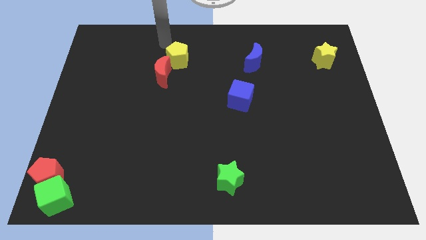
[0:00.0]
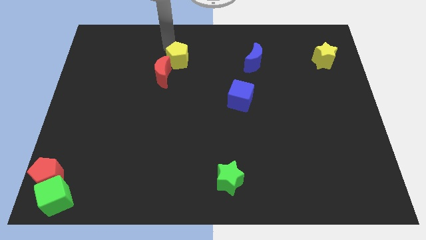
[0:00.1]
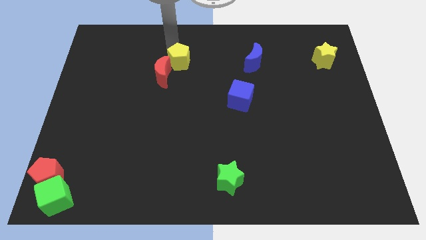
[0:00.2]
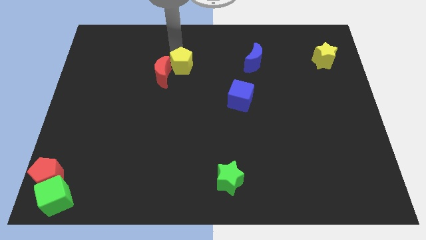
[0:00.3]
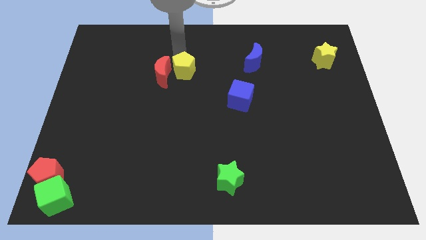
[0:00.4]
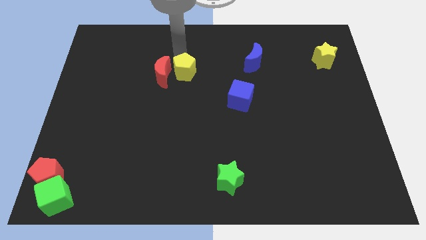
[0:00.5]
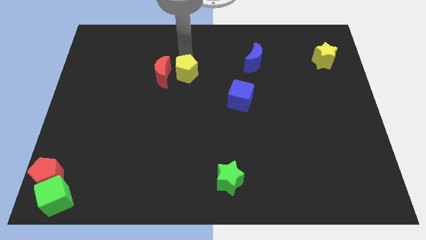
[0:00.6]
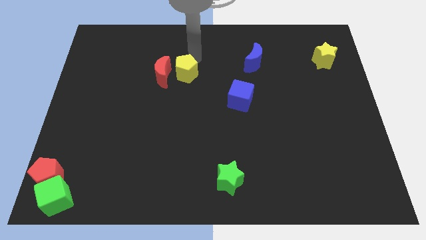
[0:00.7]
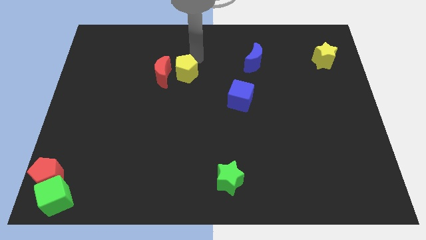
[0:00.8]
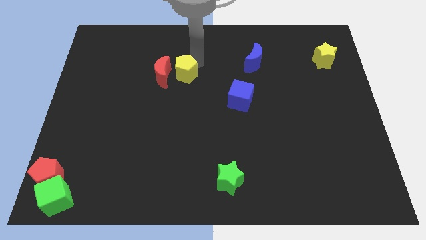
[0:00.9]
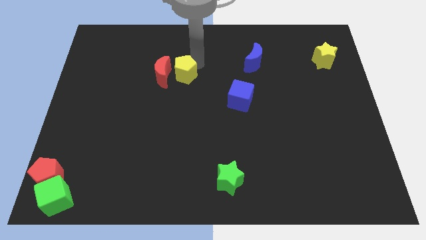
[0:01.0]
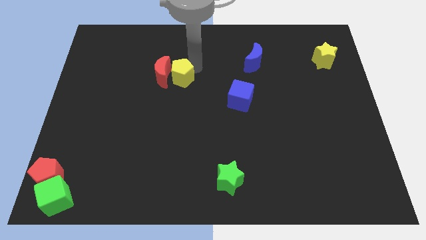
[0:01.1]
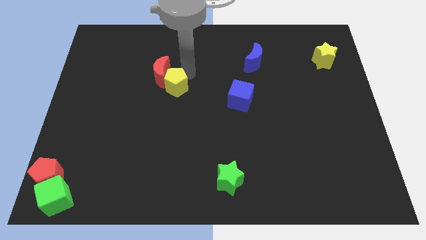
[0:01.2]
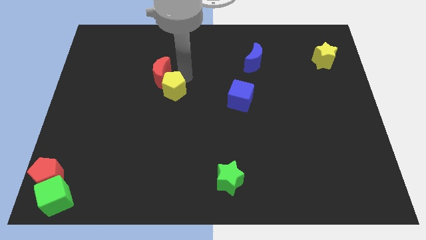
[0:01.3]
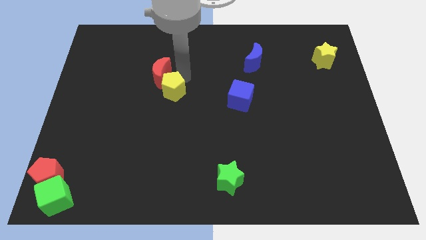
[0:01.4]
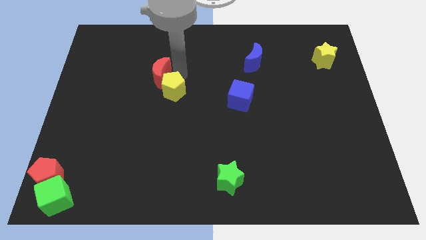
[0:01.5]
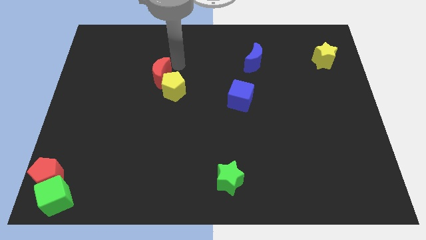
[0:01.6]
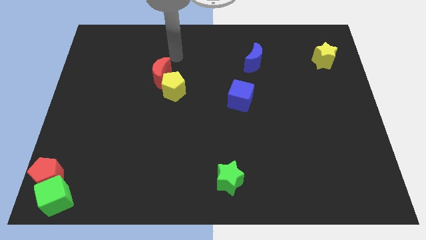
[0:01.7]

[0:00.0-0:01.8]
slightly push the yellow pentagon towards the center of the board

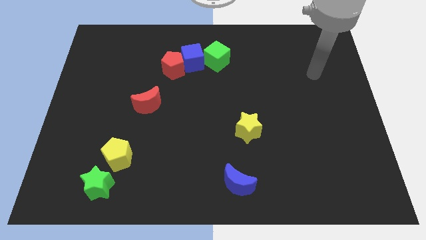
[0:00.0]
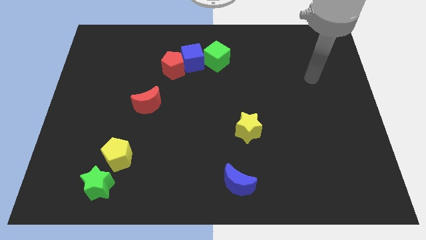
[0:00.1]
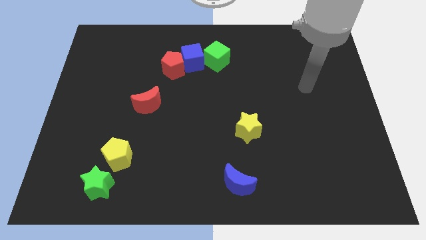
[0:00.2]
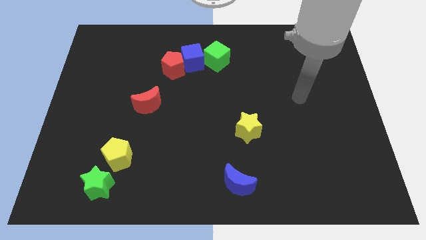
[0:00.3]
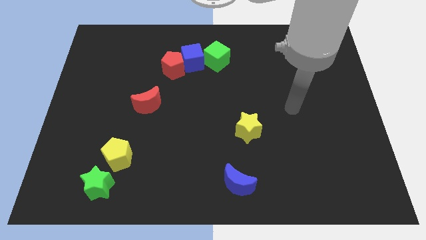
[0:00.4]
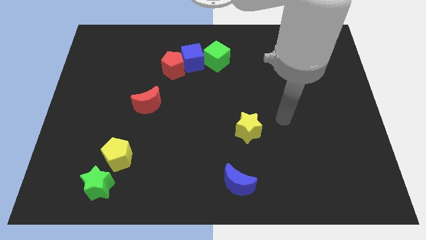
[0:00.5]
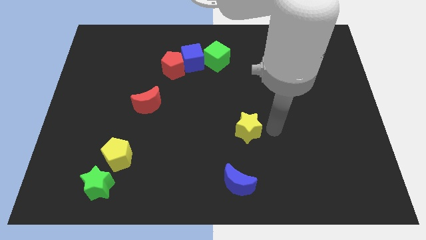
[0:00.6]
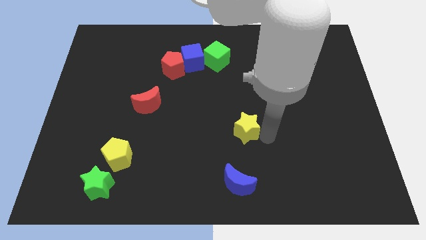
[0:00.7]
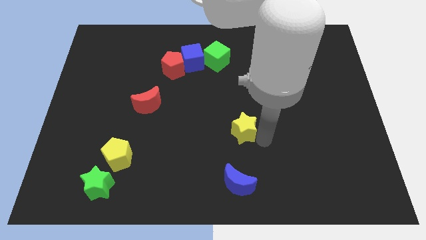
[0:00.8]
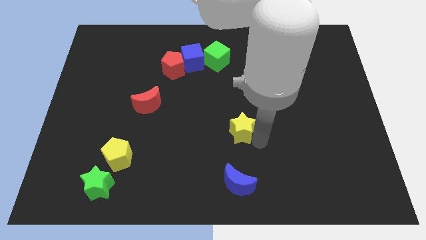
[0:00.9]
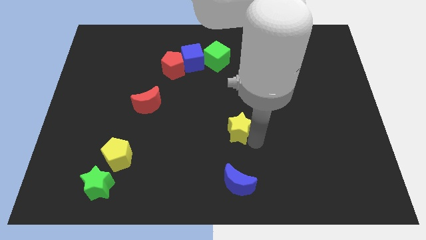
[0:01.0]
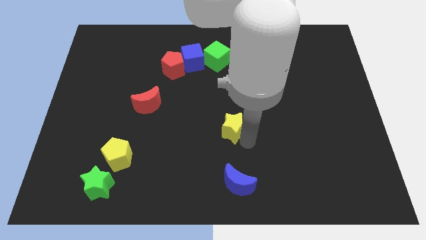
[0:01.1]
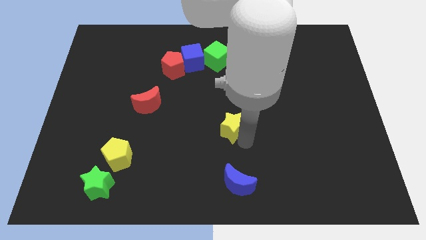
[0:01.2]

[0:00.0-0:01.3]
slightly push the yellow star towards the left side

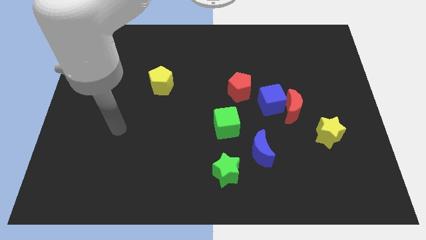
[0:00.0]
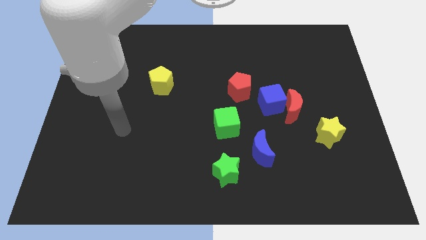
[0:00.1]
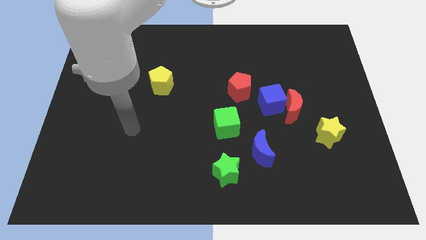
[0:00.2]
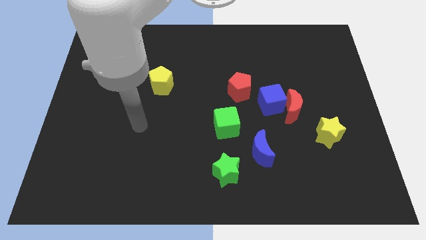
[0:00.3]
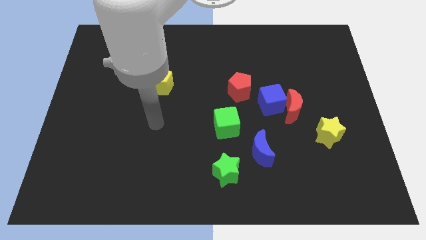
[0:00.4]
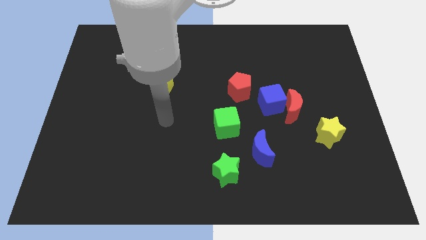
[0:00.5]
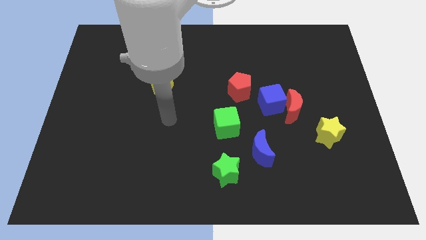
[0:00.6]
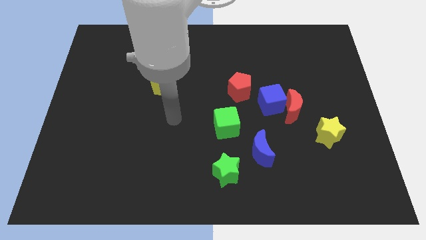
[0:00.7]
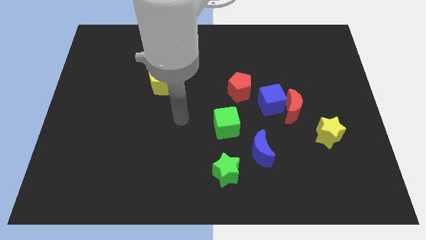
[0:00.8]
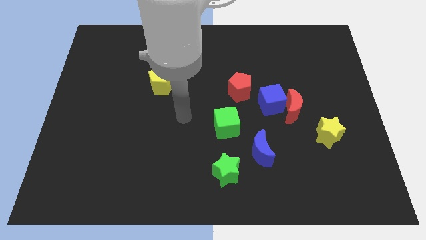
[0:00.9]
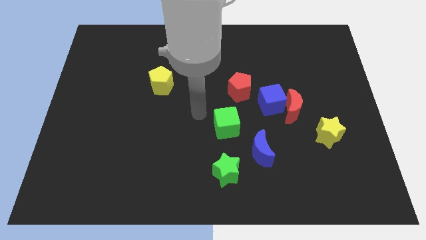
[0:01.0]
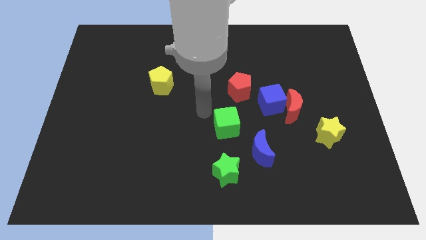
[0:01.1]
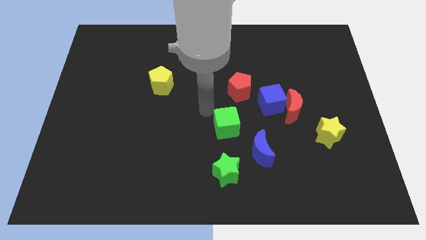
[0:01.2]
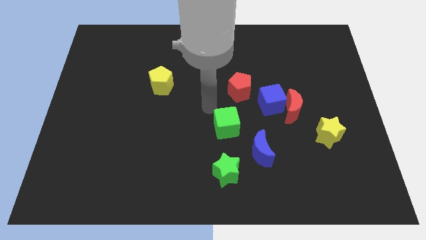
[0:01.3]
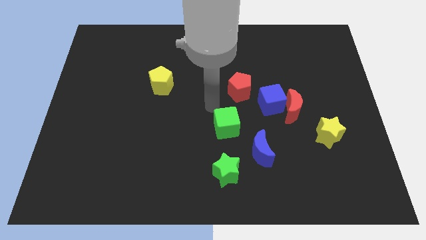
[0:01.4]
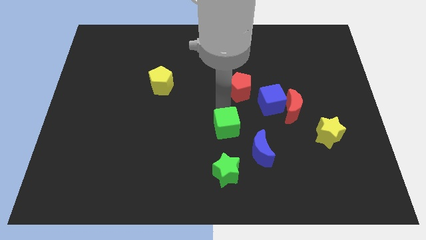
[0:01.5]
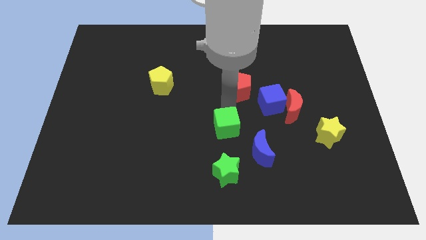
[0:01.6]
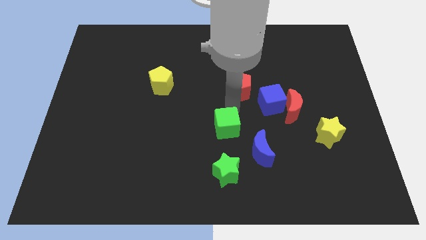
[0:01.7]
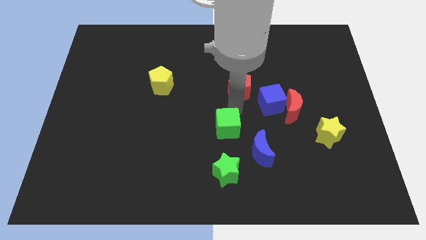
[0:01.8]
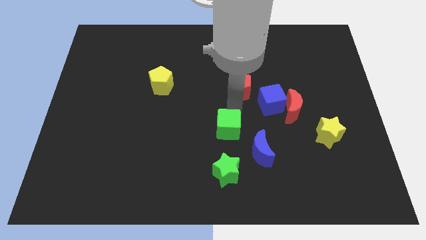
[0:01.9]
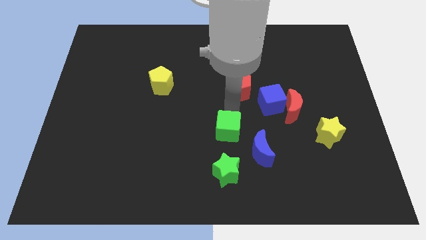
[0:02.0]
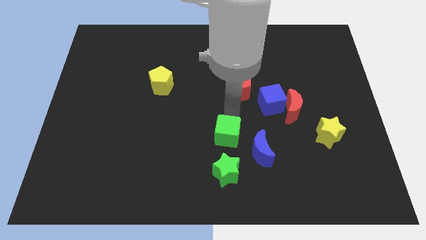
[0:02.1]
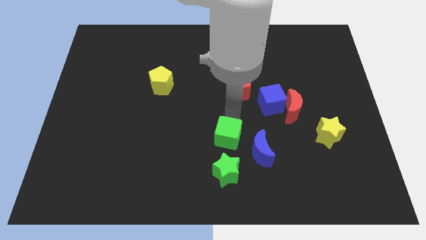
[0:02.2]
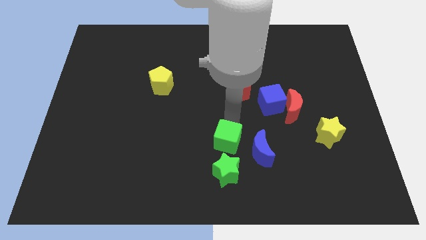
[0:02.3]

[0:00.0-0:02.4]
move the green cube close to the green star

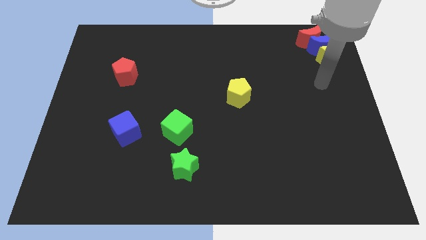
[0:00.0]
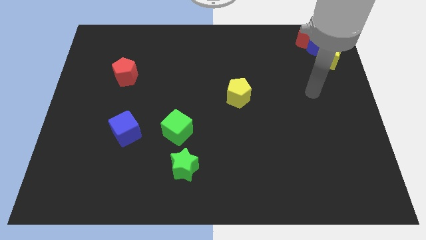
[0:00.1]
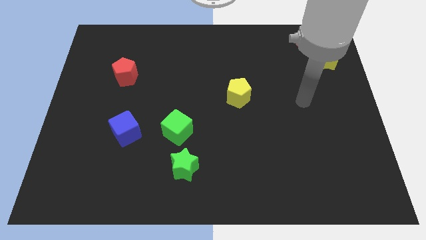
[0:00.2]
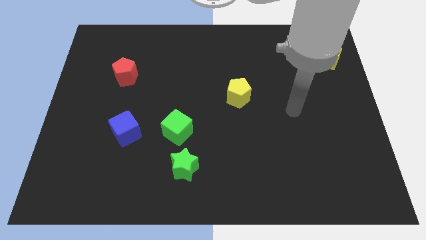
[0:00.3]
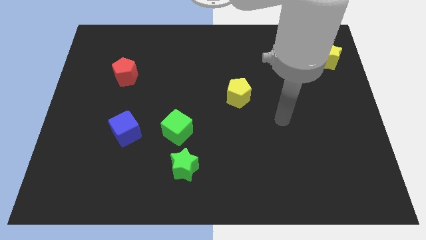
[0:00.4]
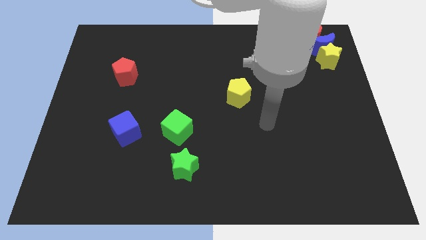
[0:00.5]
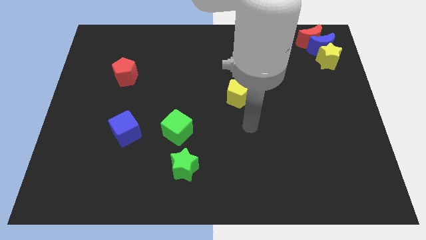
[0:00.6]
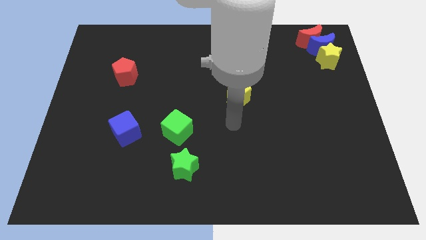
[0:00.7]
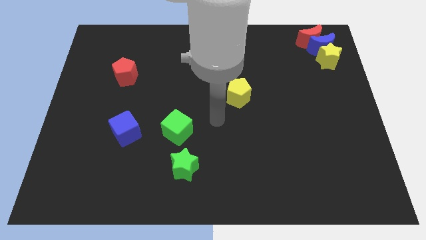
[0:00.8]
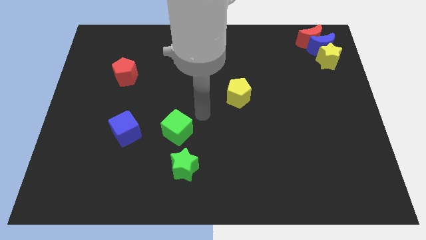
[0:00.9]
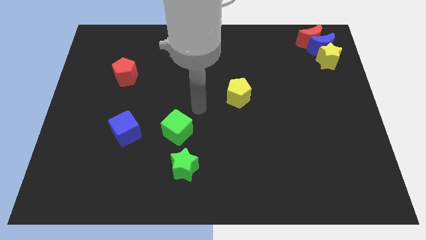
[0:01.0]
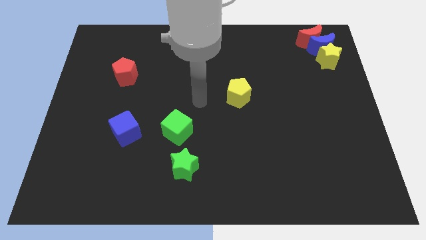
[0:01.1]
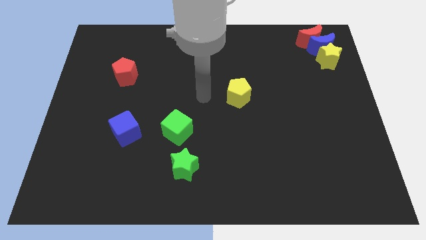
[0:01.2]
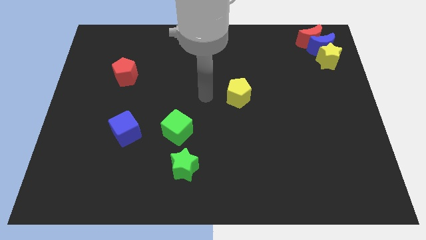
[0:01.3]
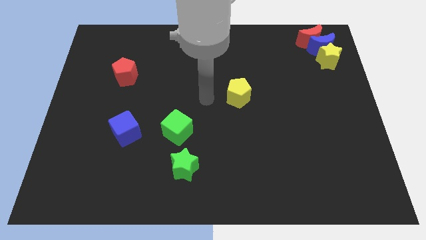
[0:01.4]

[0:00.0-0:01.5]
point your arm at the left of the yellow pentagon

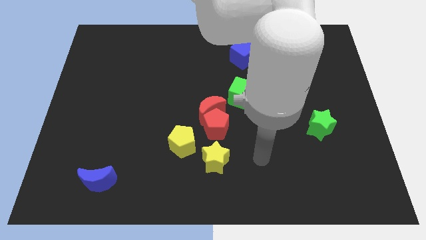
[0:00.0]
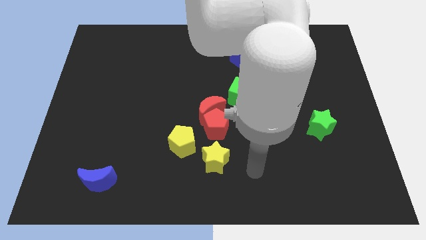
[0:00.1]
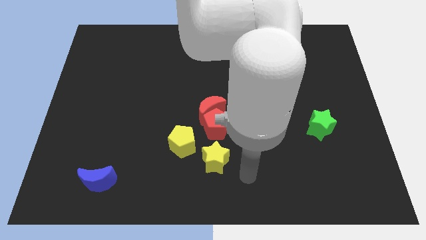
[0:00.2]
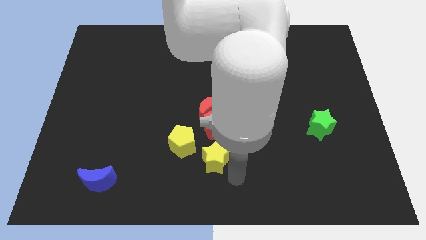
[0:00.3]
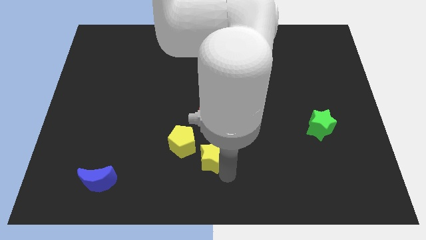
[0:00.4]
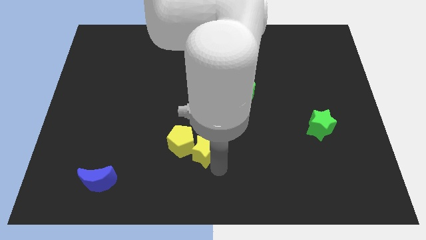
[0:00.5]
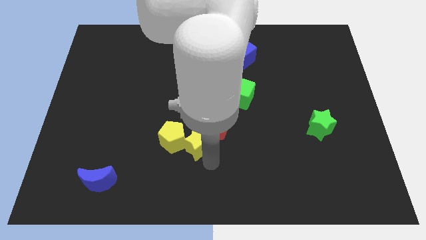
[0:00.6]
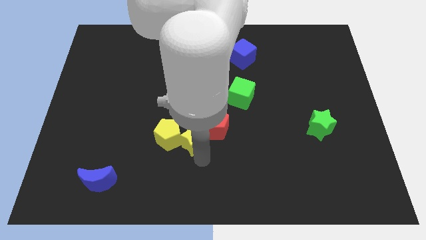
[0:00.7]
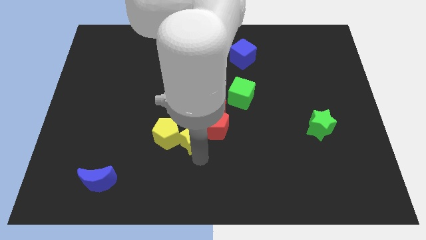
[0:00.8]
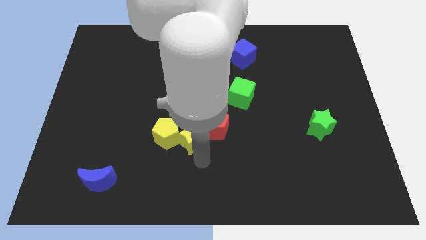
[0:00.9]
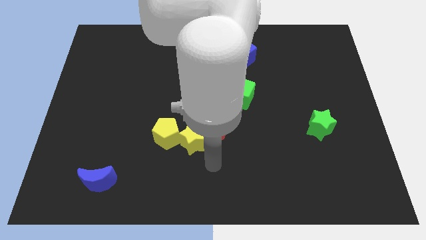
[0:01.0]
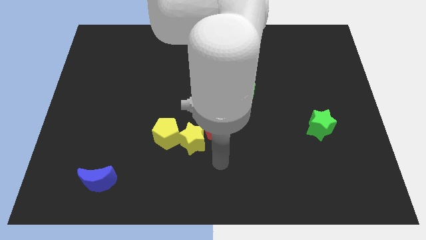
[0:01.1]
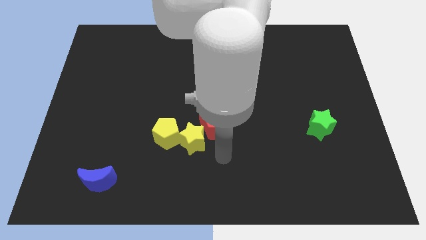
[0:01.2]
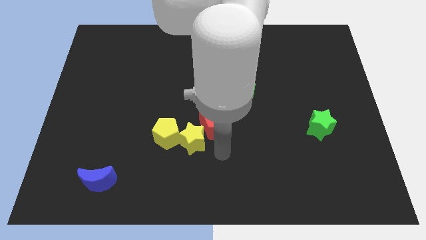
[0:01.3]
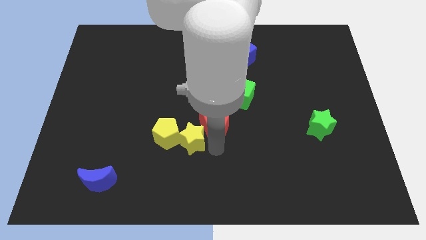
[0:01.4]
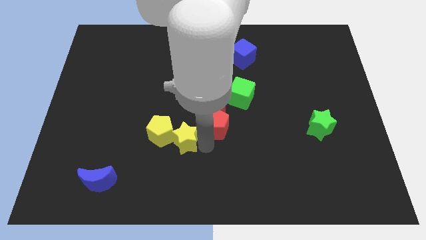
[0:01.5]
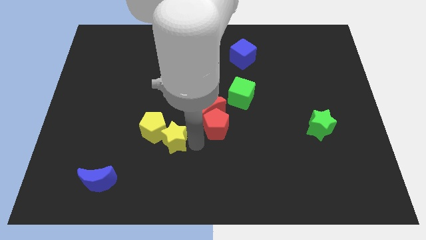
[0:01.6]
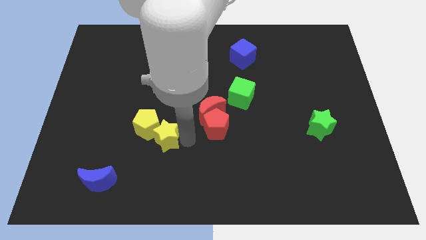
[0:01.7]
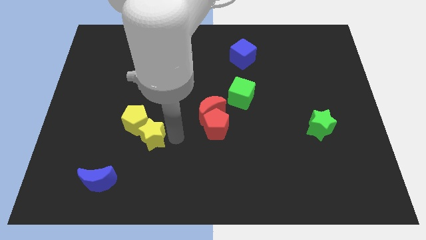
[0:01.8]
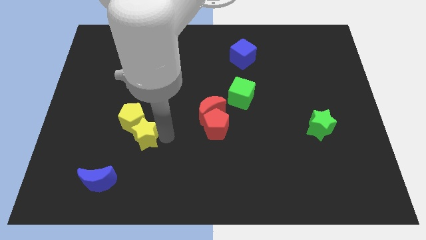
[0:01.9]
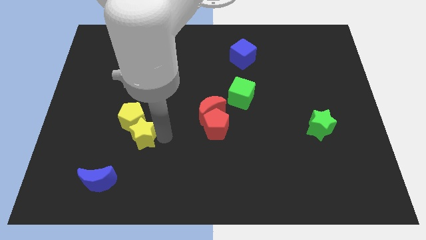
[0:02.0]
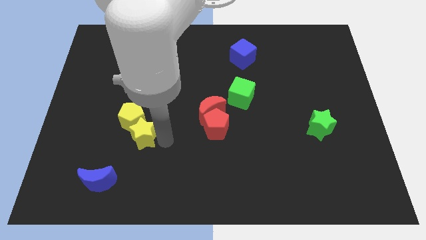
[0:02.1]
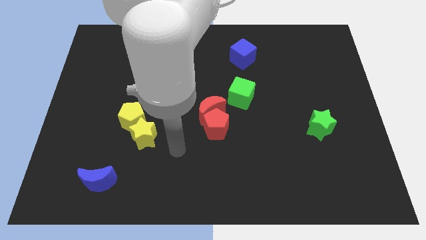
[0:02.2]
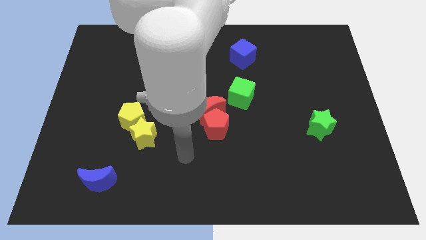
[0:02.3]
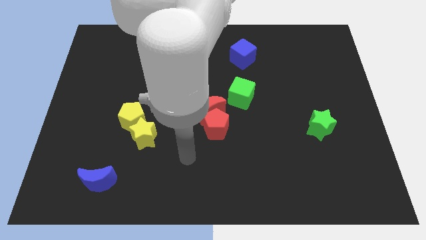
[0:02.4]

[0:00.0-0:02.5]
push the yellow pentagon towards the center left with the yellow star
